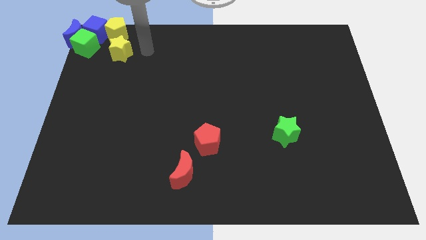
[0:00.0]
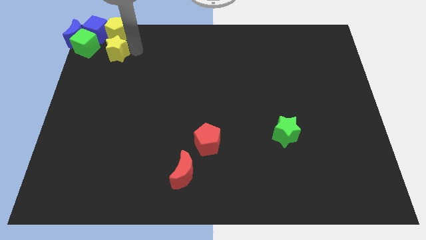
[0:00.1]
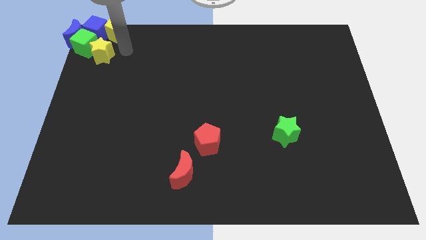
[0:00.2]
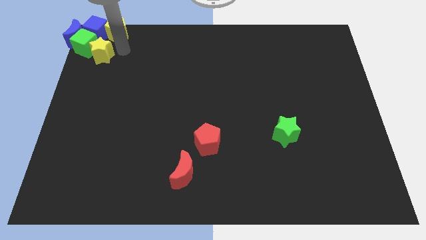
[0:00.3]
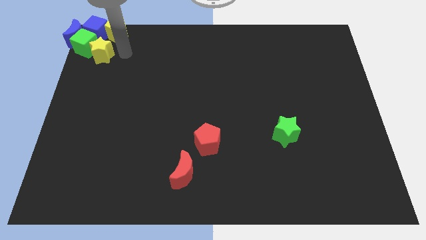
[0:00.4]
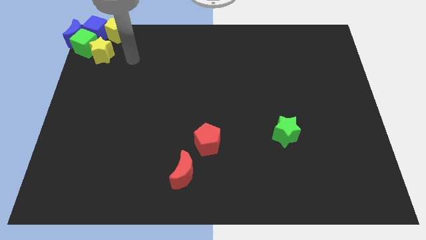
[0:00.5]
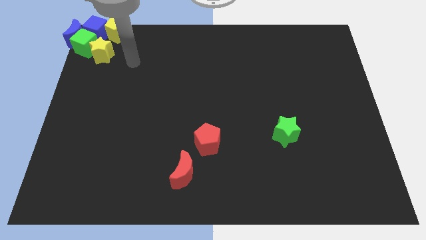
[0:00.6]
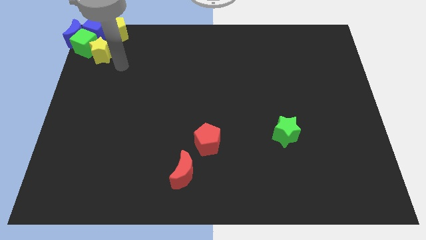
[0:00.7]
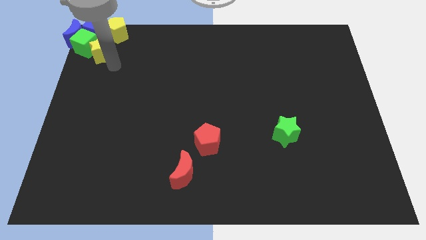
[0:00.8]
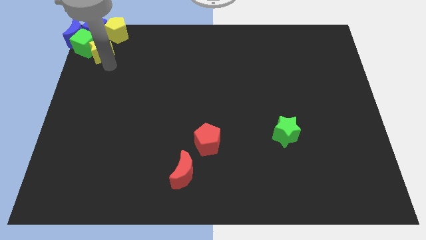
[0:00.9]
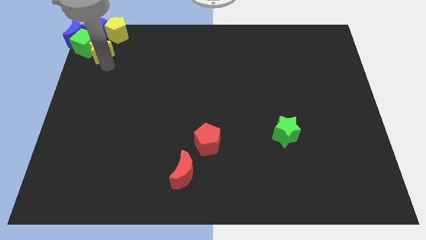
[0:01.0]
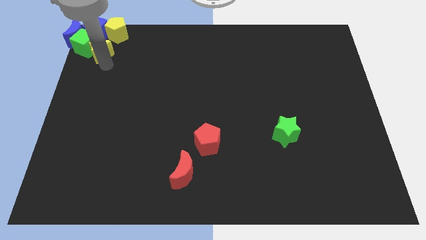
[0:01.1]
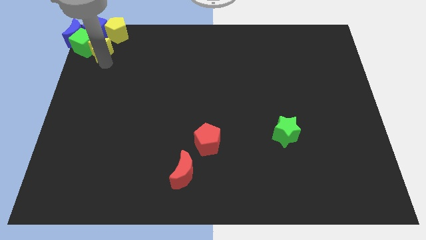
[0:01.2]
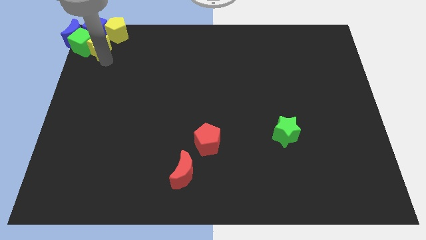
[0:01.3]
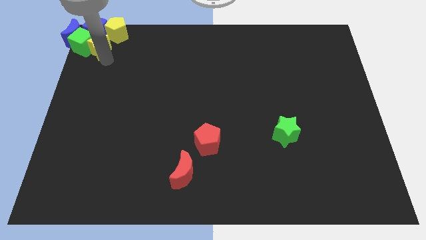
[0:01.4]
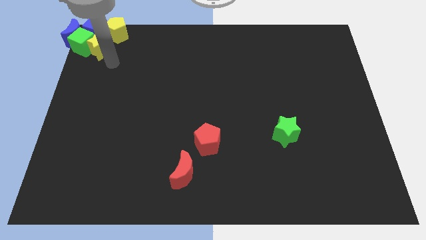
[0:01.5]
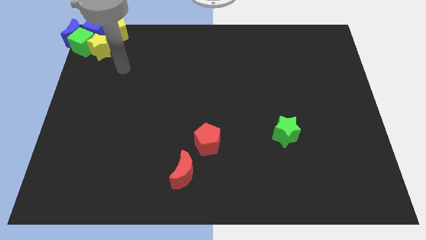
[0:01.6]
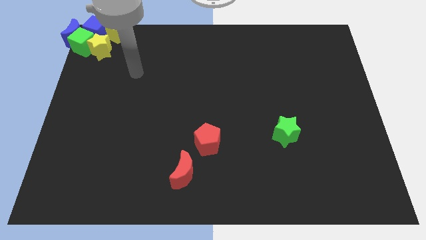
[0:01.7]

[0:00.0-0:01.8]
push the yellow star close to the green cube

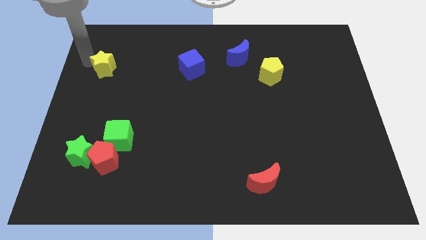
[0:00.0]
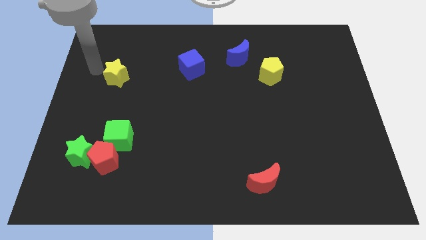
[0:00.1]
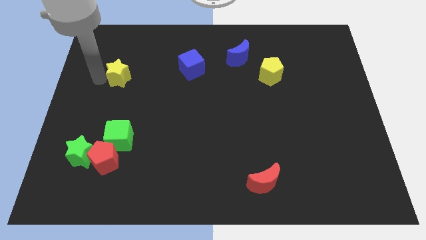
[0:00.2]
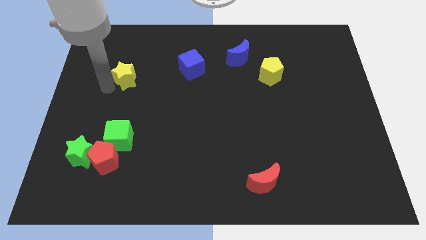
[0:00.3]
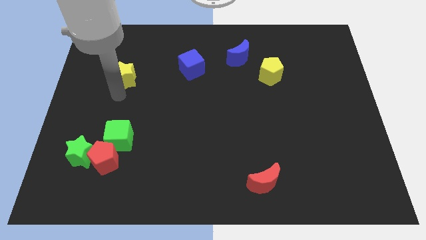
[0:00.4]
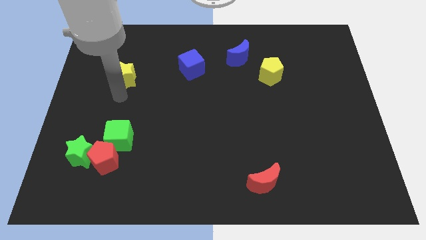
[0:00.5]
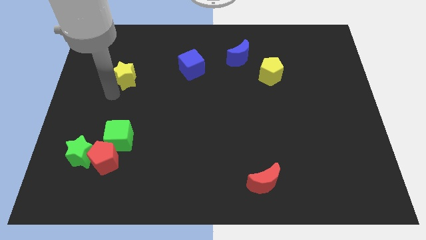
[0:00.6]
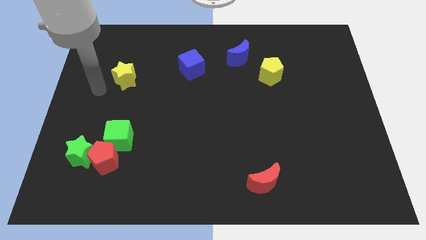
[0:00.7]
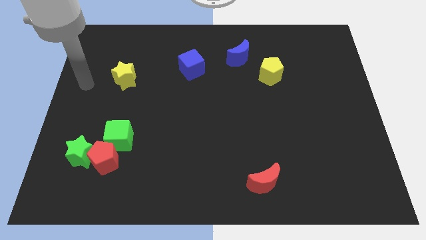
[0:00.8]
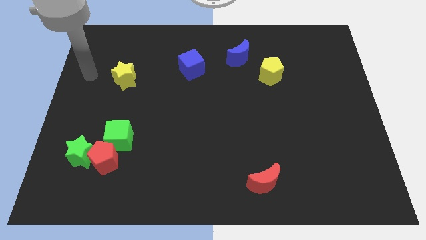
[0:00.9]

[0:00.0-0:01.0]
touch the yellow star

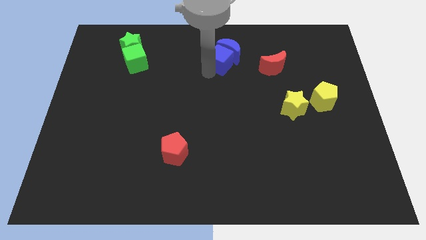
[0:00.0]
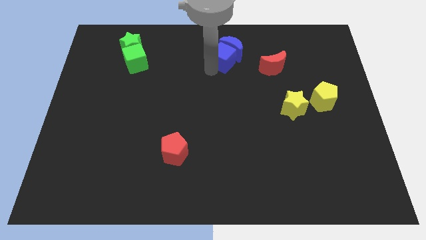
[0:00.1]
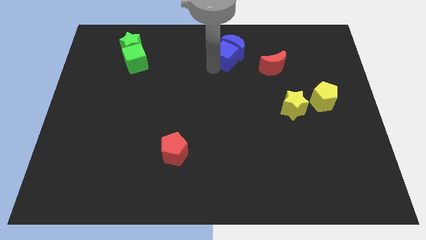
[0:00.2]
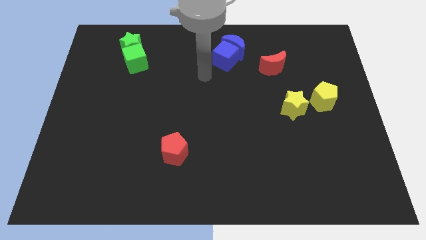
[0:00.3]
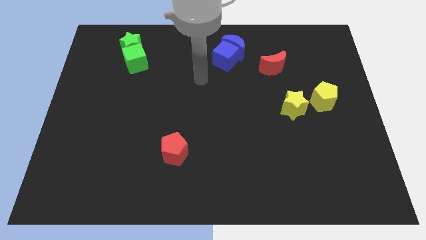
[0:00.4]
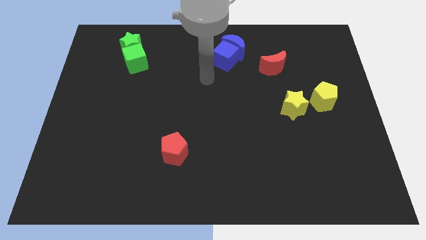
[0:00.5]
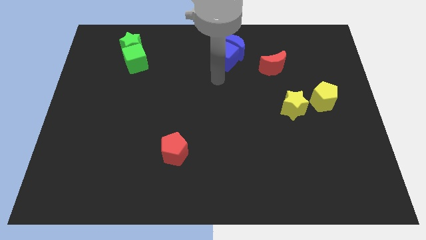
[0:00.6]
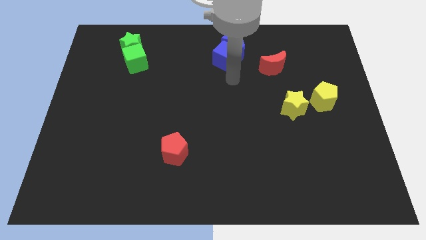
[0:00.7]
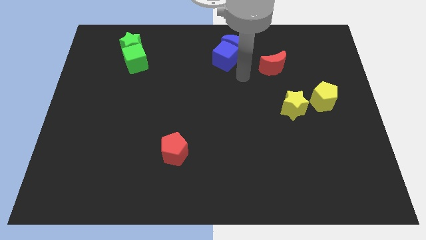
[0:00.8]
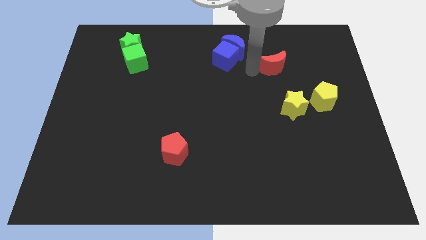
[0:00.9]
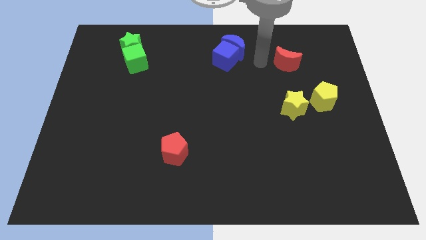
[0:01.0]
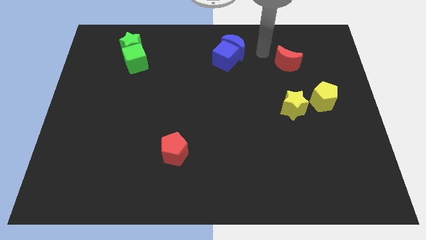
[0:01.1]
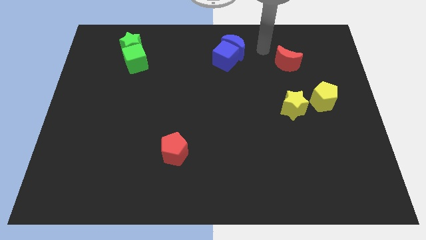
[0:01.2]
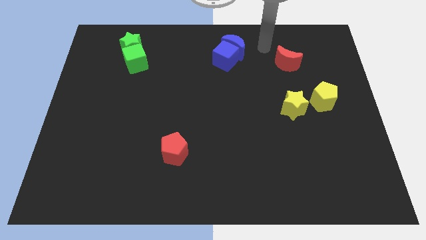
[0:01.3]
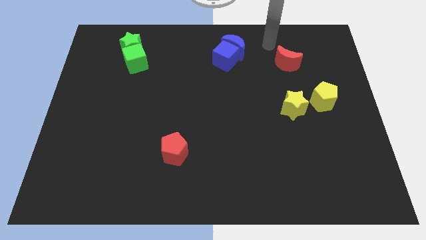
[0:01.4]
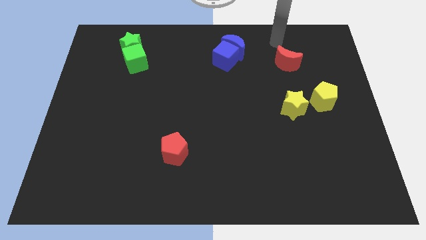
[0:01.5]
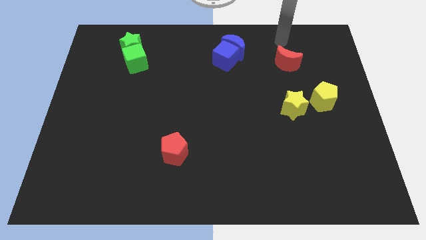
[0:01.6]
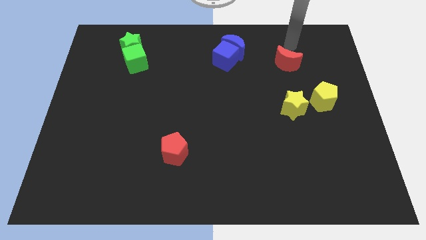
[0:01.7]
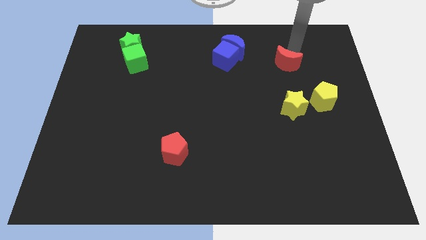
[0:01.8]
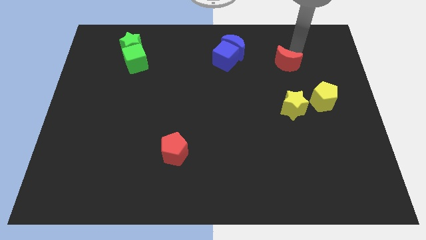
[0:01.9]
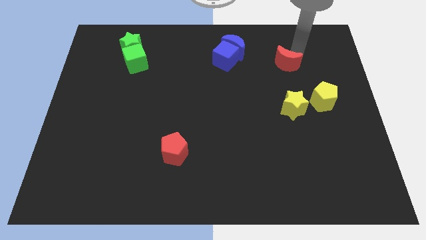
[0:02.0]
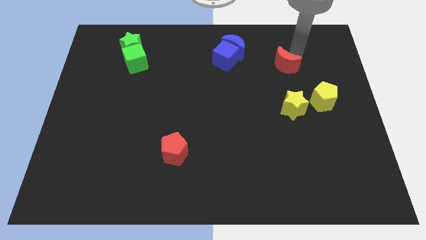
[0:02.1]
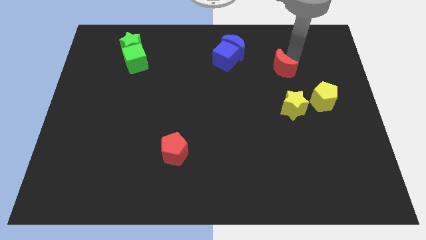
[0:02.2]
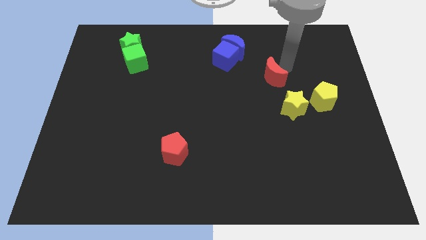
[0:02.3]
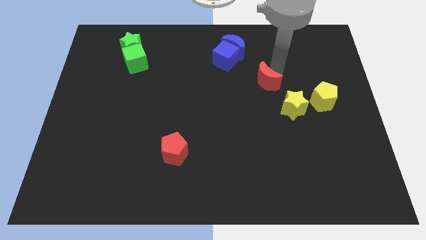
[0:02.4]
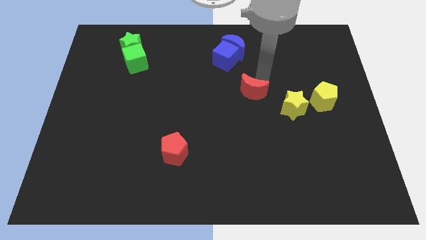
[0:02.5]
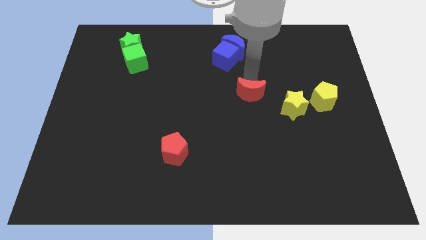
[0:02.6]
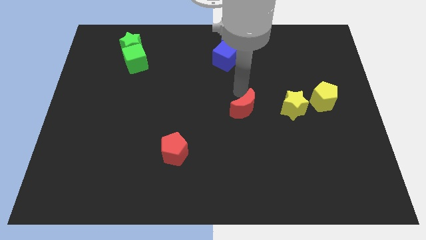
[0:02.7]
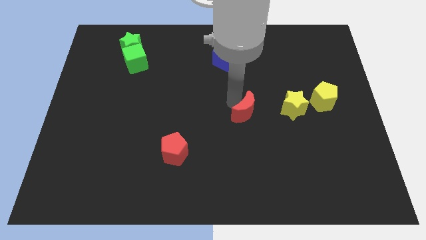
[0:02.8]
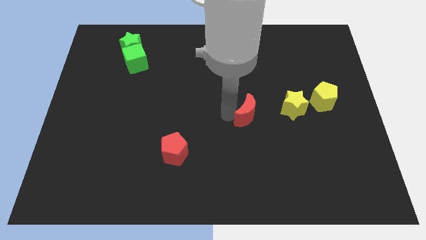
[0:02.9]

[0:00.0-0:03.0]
push red crescent beside yellow star

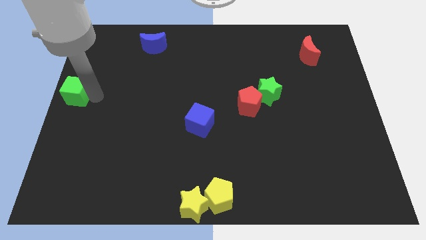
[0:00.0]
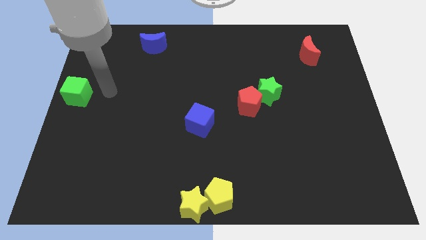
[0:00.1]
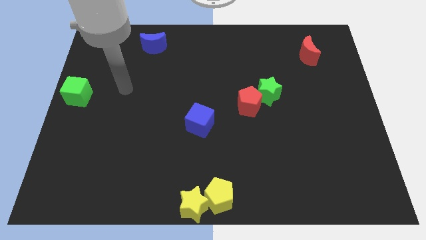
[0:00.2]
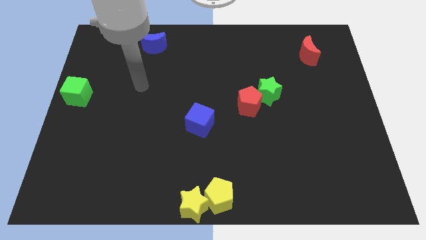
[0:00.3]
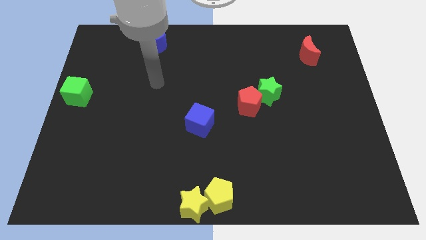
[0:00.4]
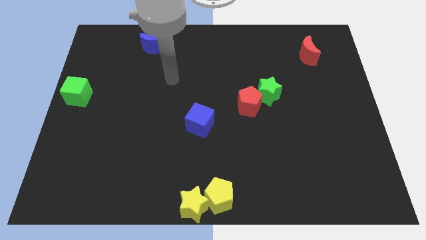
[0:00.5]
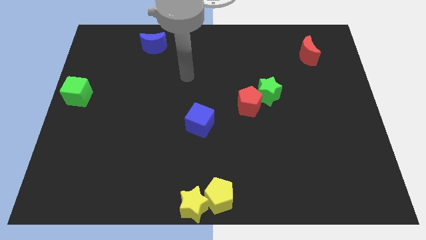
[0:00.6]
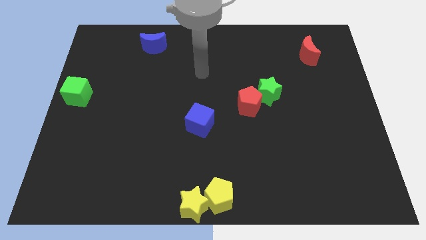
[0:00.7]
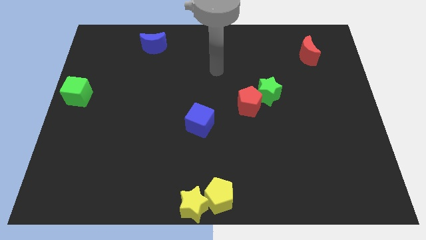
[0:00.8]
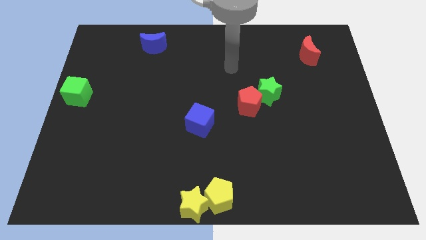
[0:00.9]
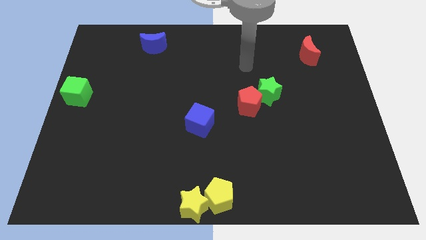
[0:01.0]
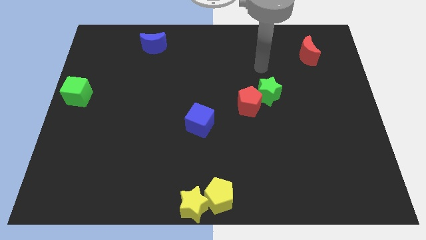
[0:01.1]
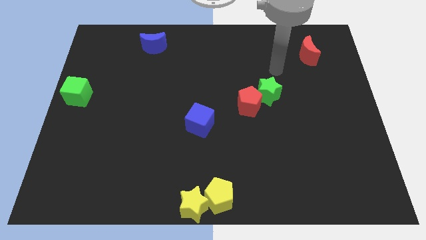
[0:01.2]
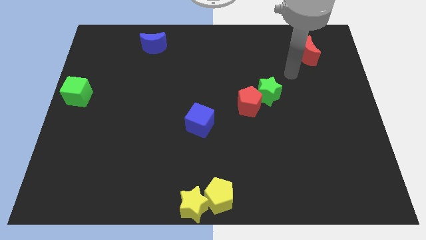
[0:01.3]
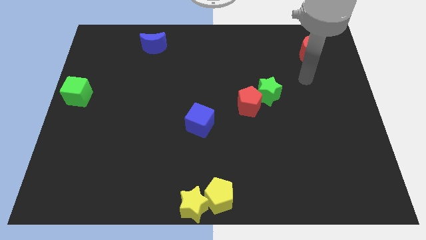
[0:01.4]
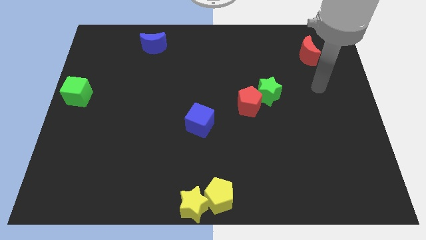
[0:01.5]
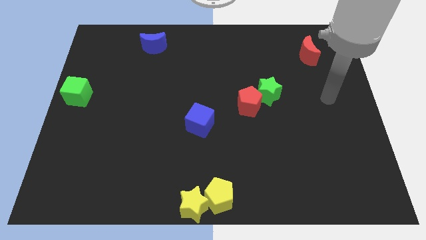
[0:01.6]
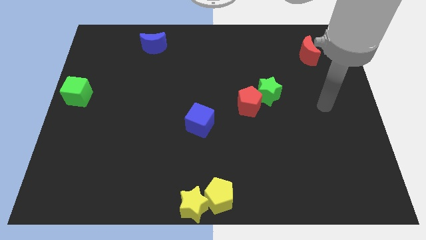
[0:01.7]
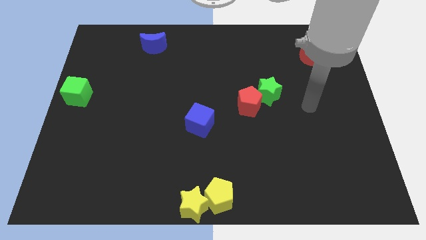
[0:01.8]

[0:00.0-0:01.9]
place your arm to right side of the green star

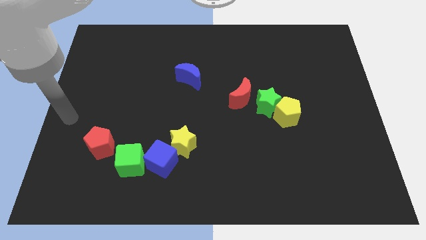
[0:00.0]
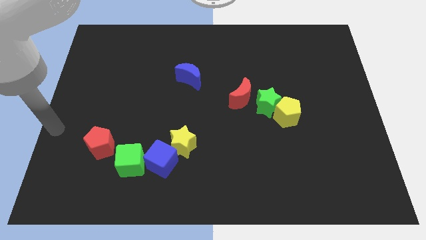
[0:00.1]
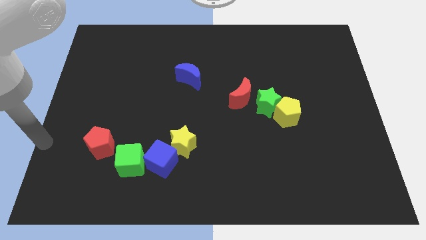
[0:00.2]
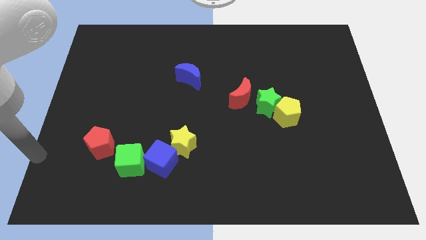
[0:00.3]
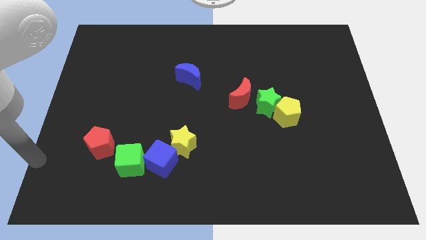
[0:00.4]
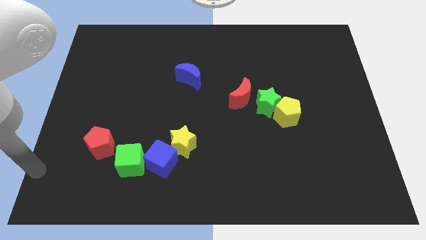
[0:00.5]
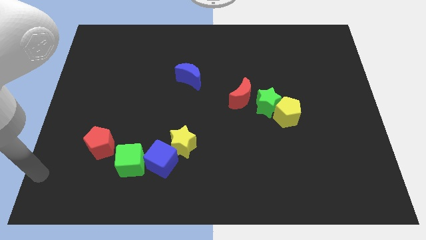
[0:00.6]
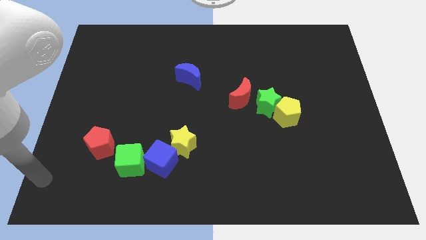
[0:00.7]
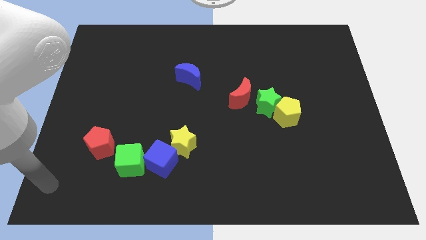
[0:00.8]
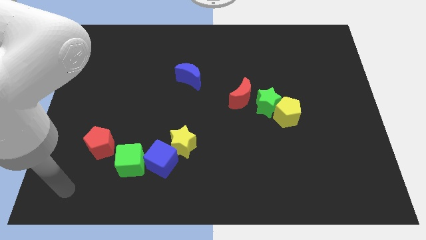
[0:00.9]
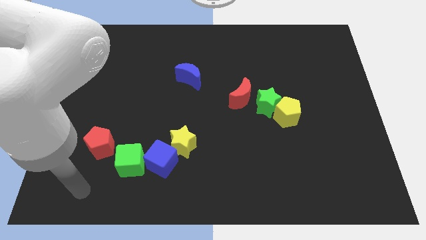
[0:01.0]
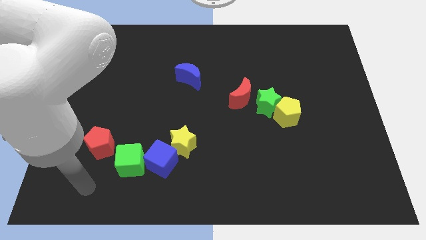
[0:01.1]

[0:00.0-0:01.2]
place your arm below red pentagon

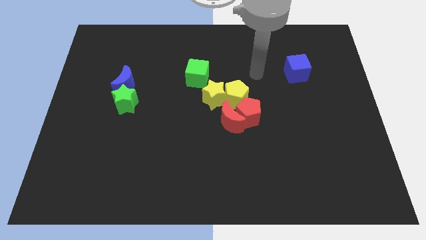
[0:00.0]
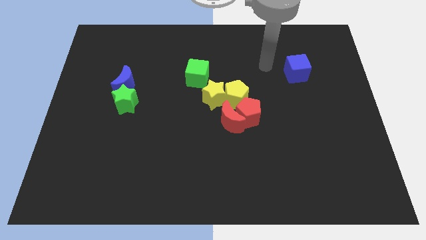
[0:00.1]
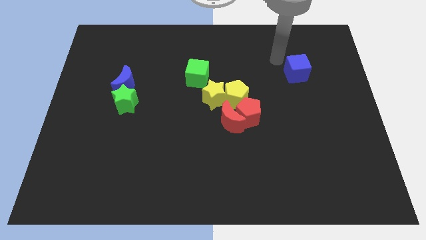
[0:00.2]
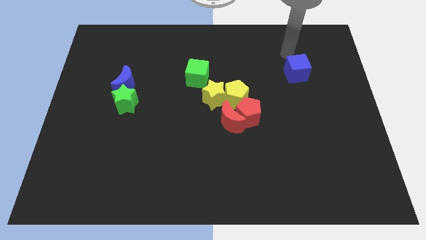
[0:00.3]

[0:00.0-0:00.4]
move your hand to the top of the blue cube
